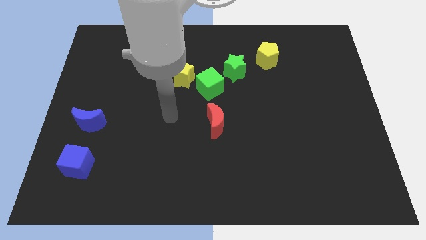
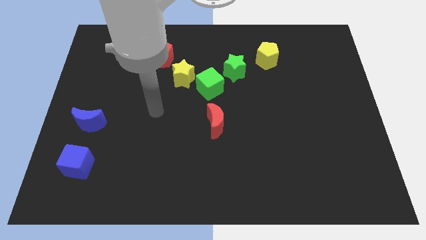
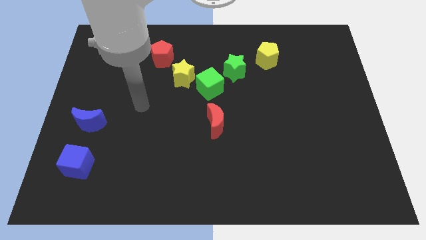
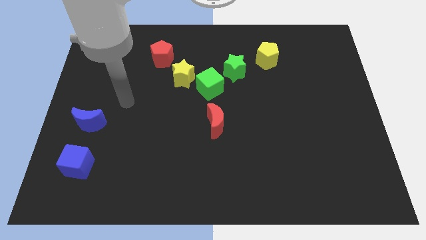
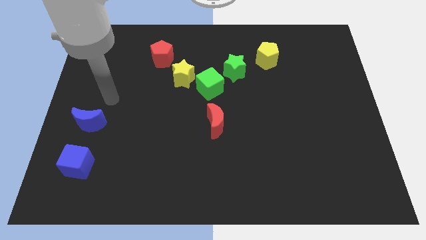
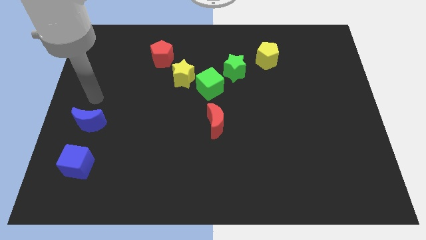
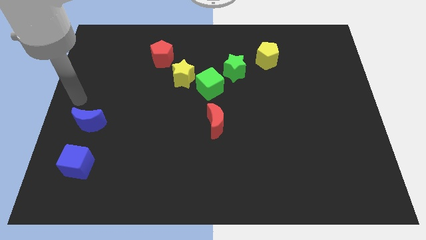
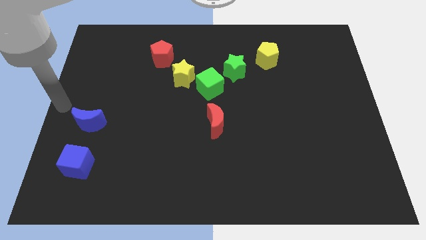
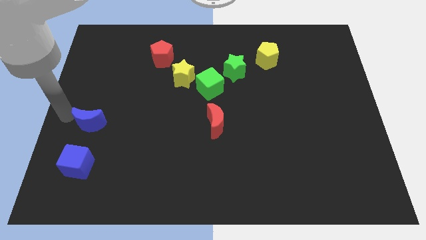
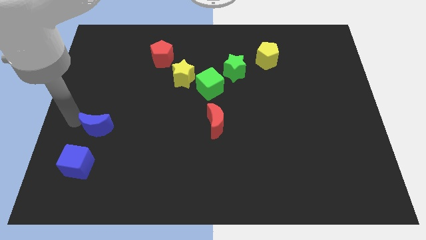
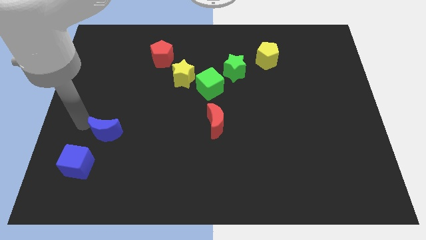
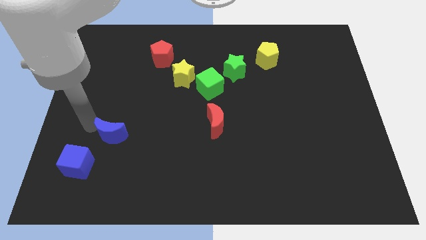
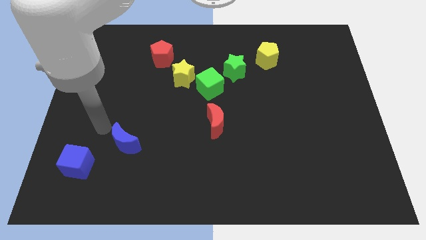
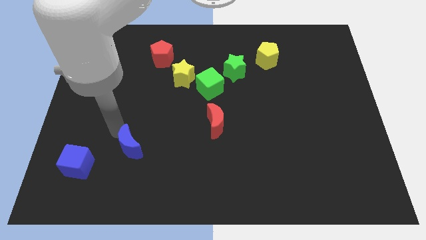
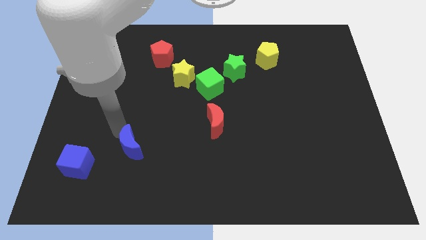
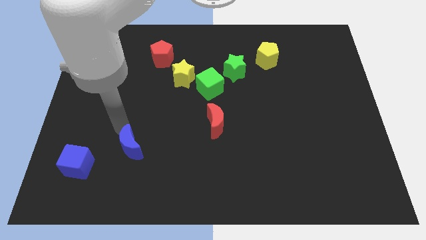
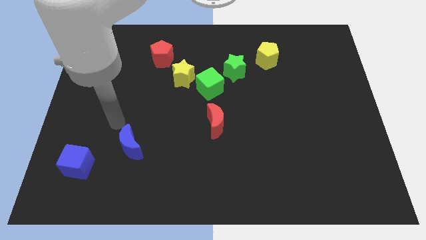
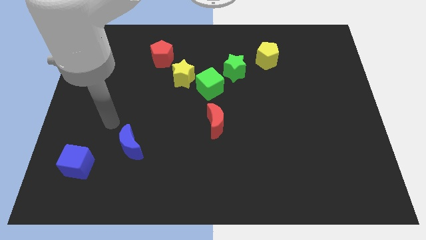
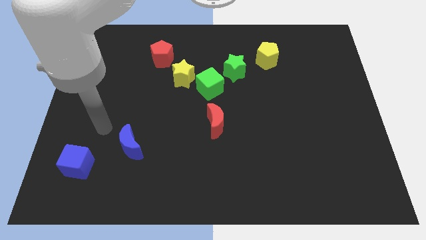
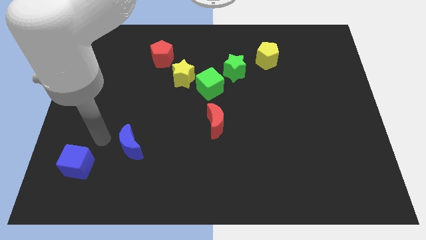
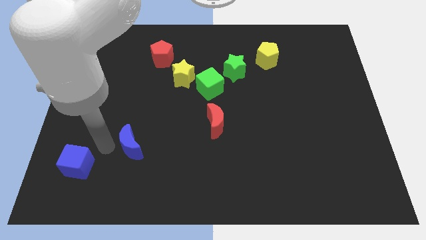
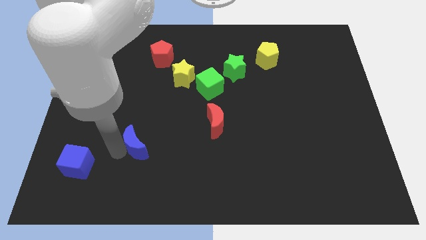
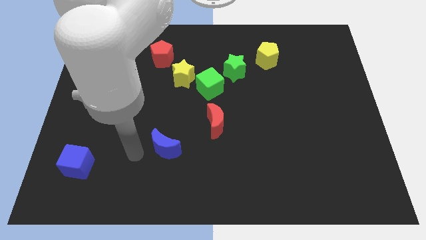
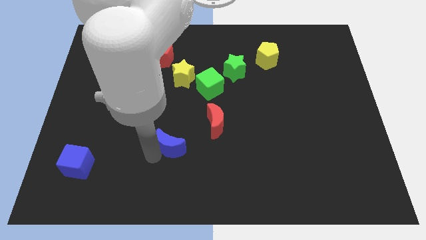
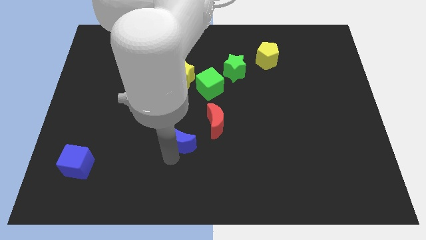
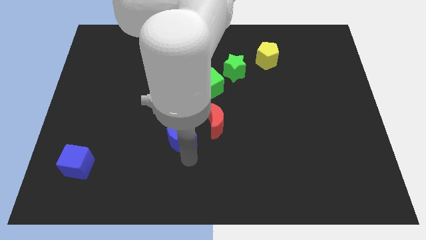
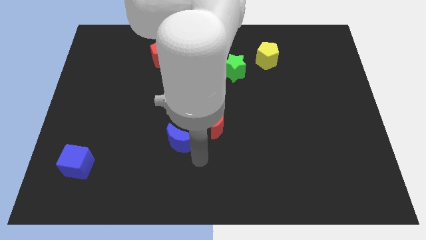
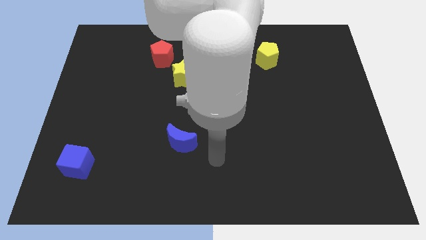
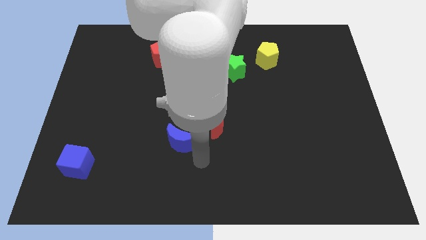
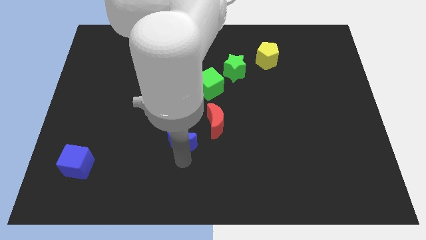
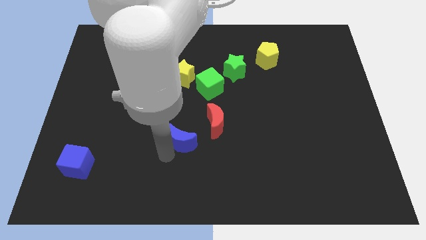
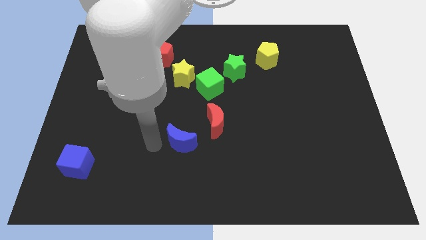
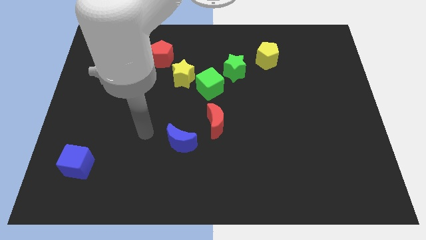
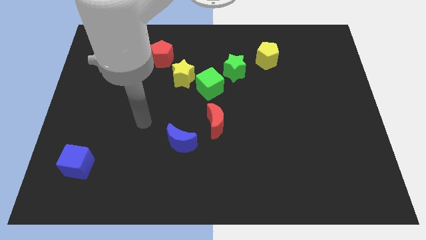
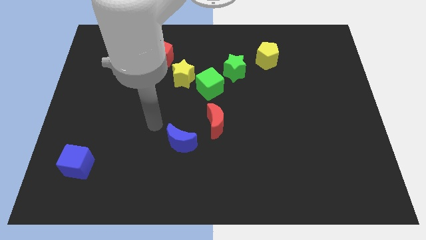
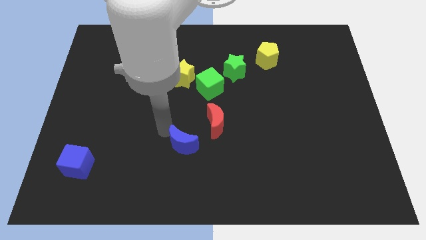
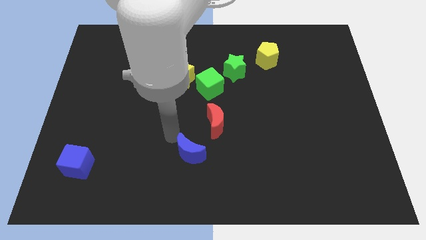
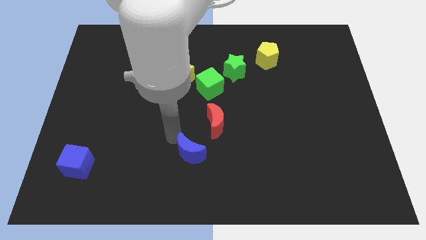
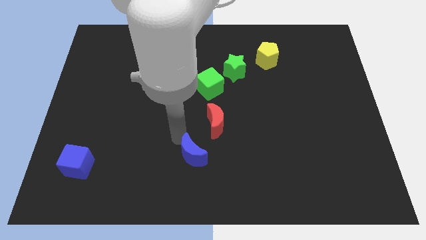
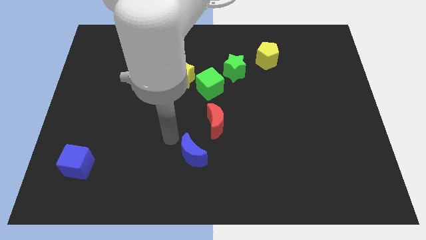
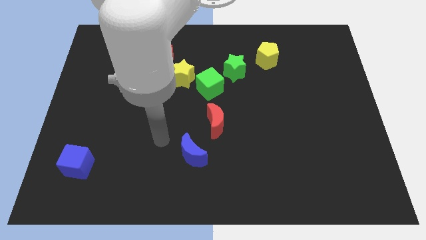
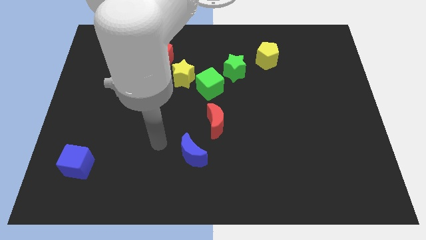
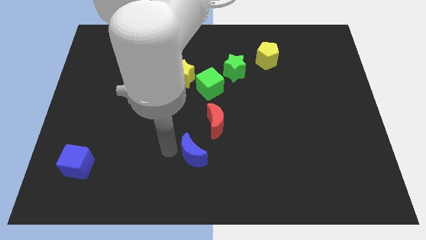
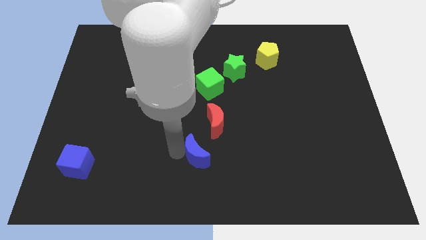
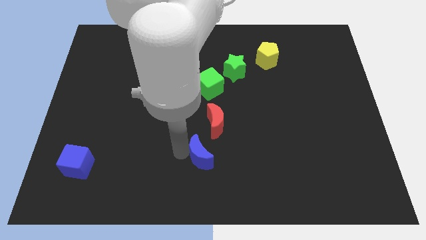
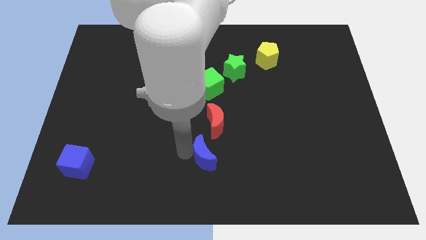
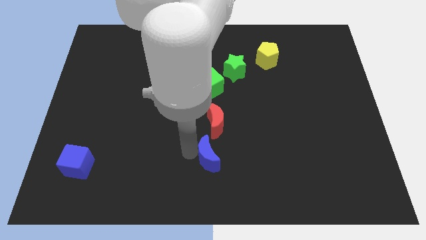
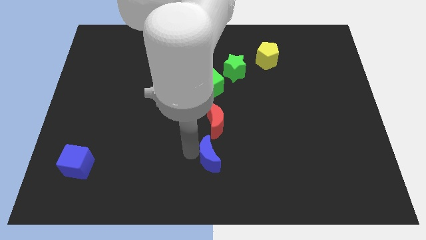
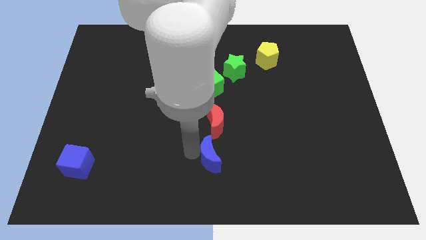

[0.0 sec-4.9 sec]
push the blue crescent to the bottom of the red crescent

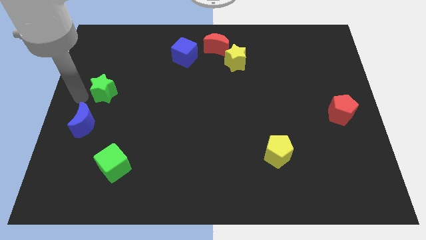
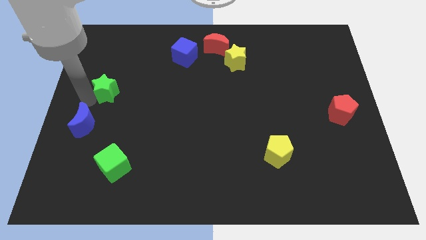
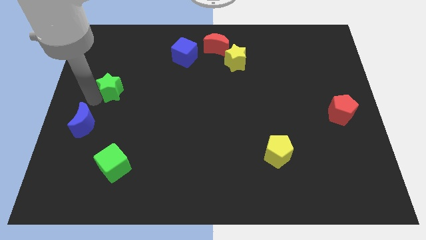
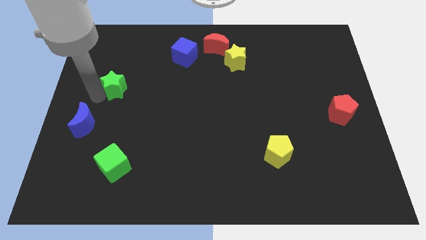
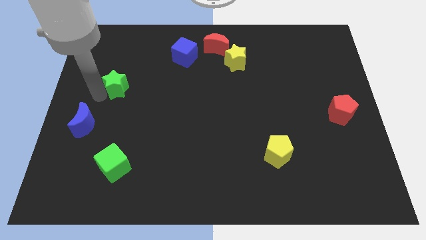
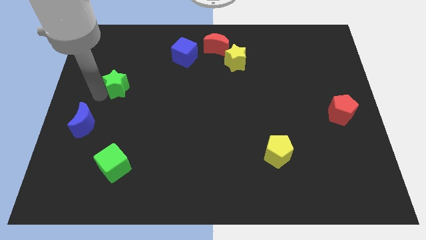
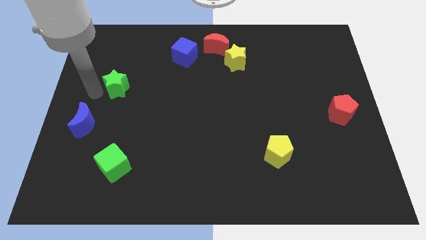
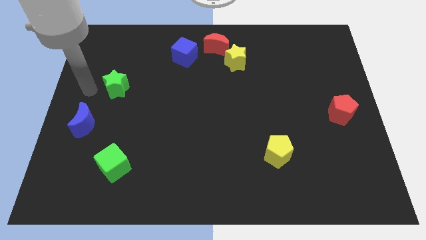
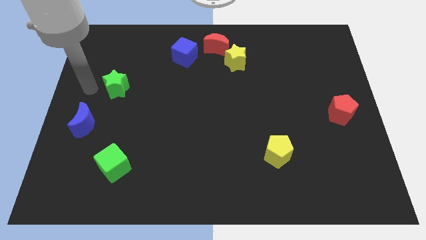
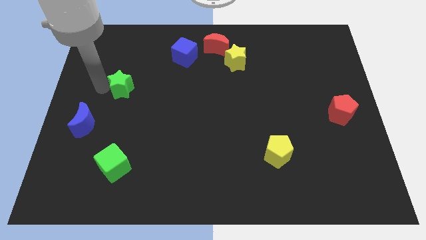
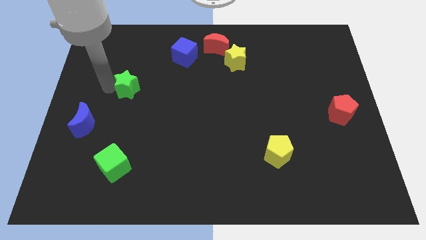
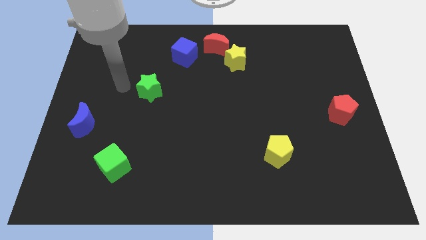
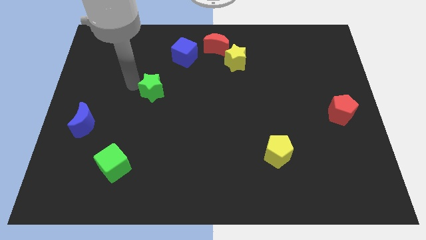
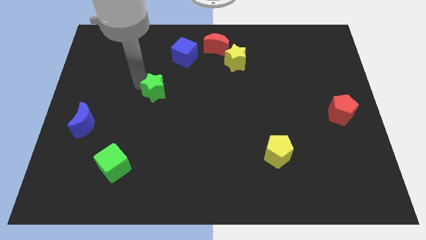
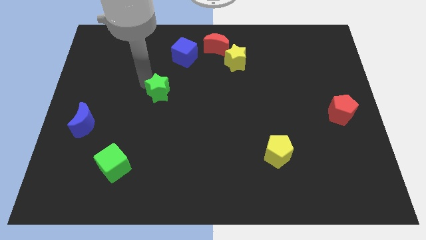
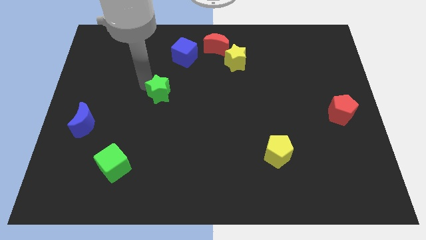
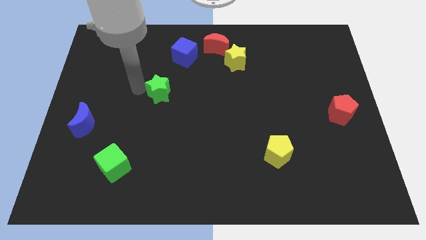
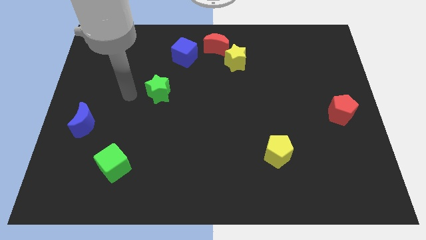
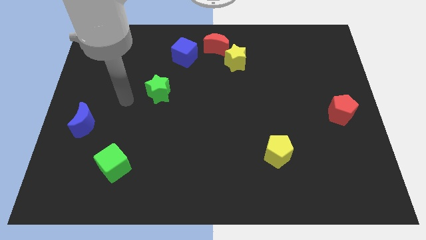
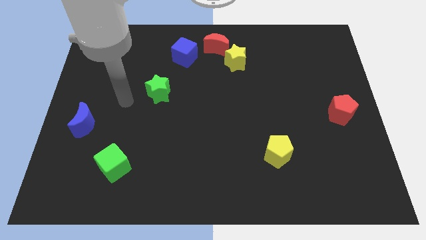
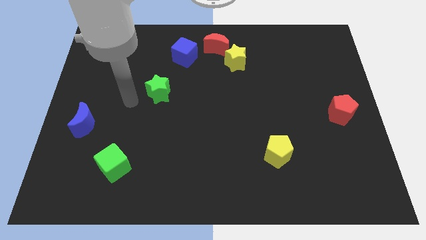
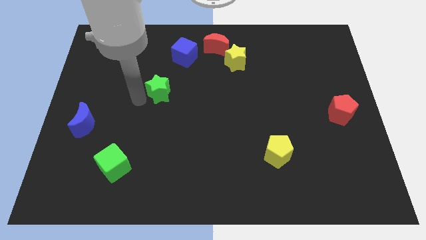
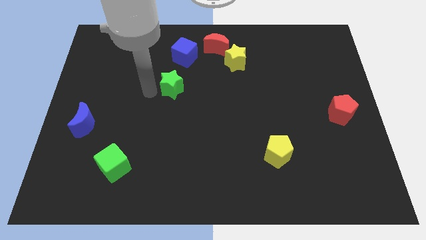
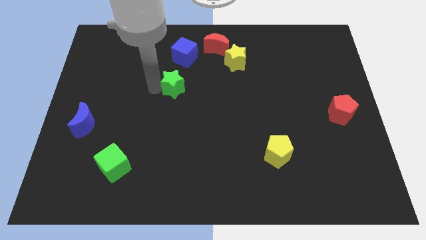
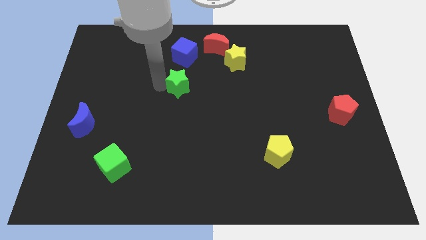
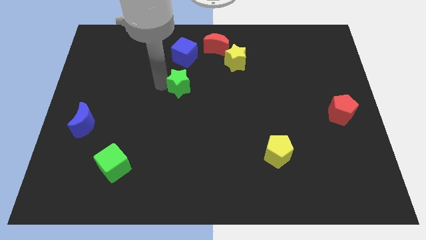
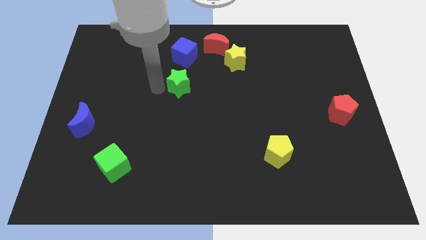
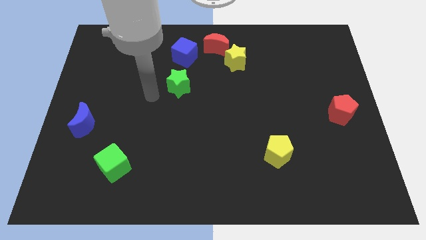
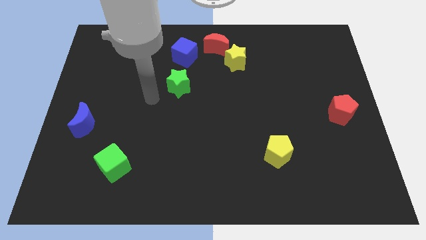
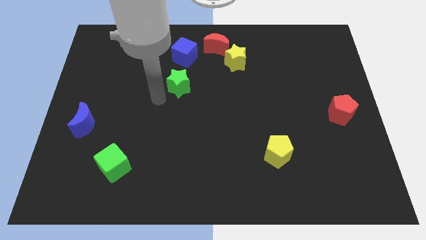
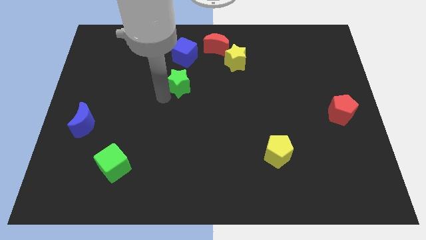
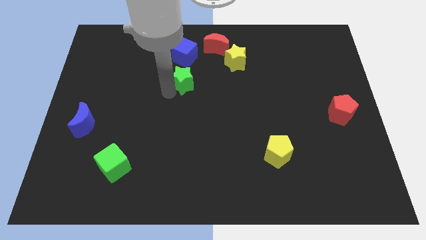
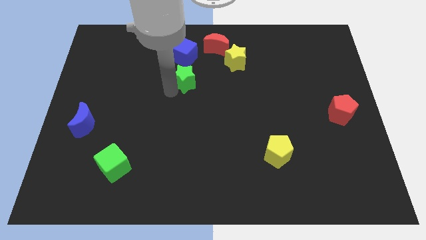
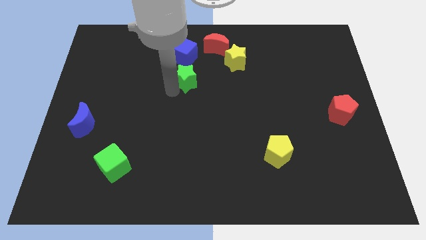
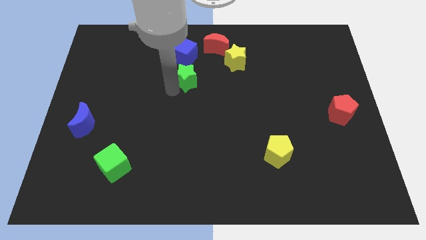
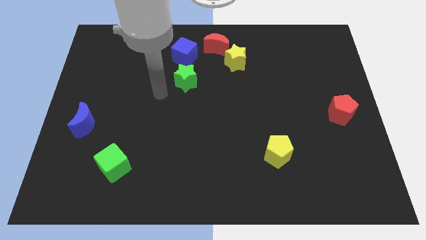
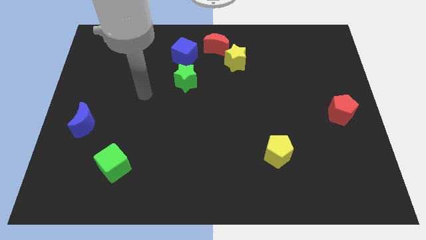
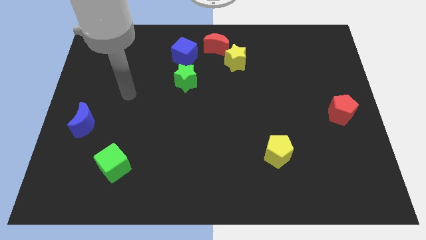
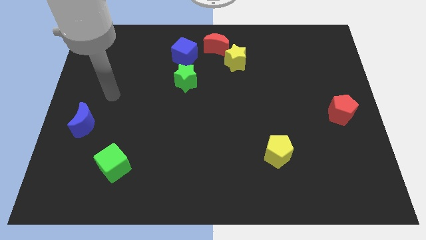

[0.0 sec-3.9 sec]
place green star to the bottom of the blue cube
